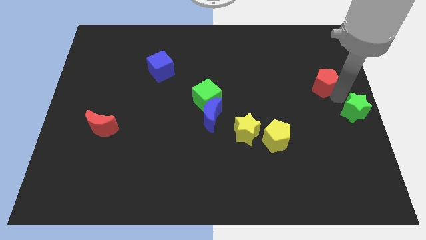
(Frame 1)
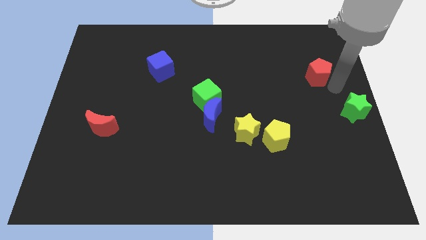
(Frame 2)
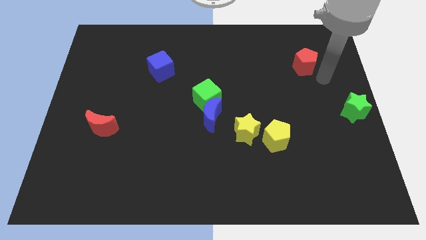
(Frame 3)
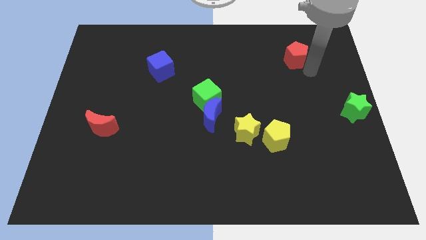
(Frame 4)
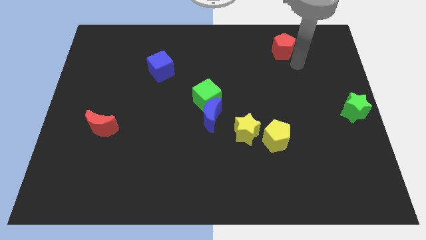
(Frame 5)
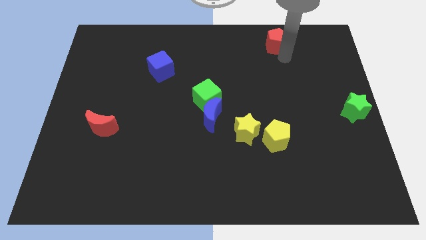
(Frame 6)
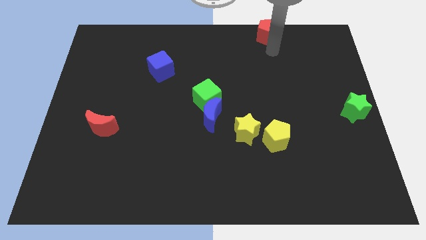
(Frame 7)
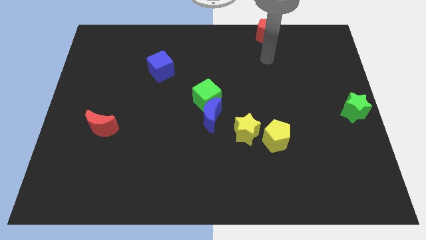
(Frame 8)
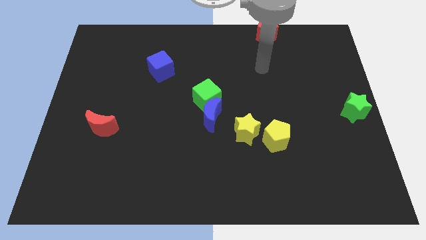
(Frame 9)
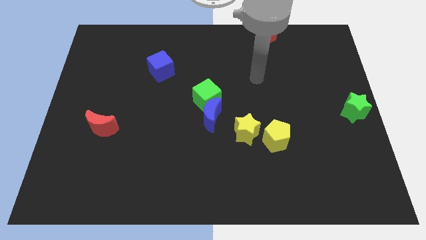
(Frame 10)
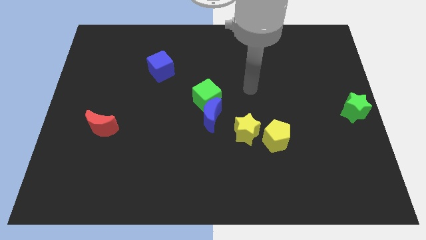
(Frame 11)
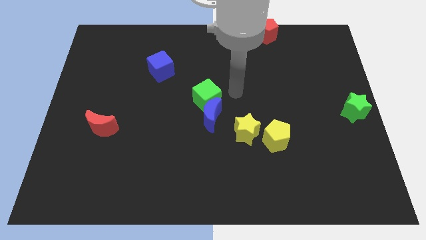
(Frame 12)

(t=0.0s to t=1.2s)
push red crescent towards the top of the board

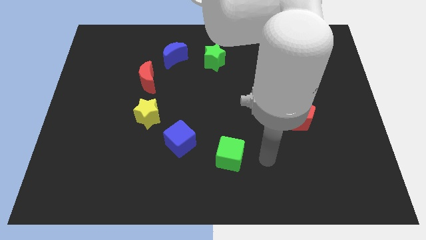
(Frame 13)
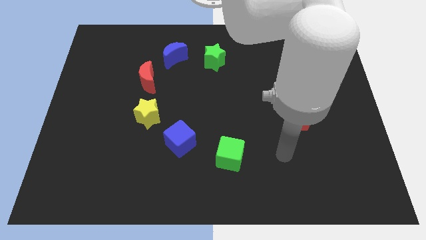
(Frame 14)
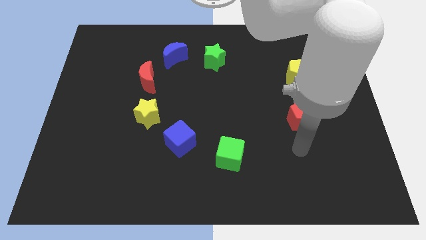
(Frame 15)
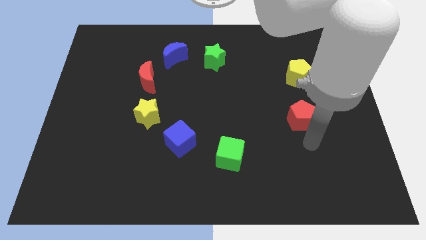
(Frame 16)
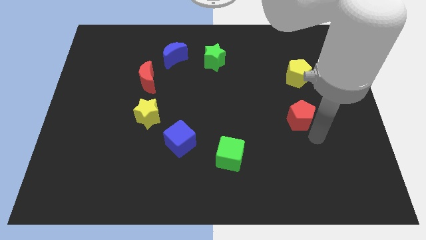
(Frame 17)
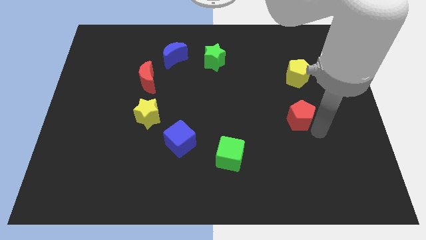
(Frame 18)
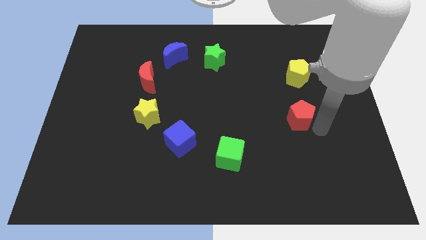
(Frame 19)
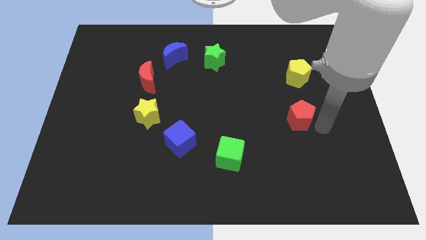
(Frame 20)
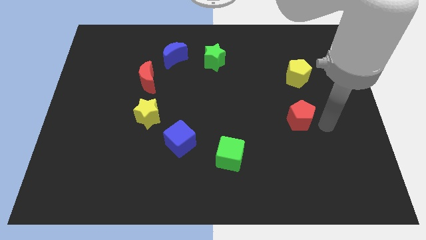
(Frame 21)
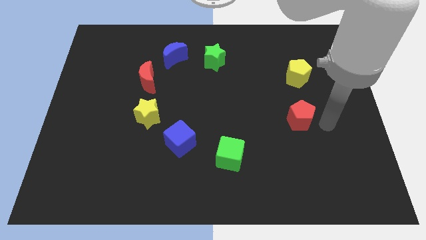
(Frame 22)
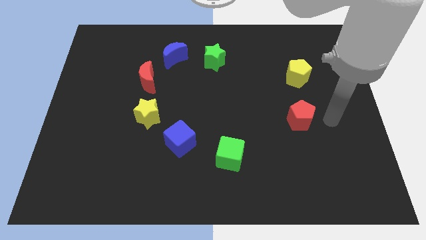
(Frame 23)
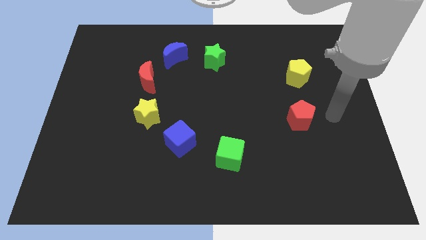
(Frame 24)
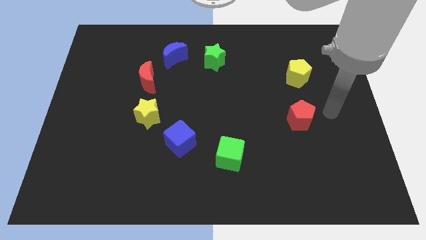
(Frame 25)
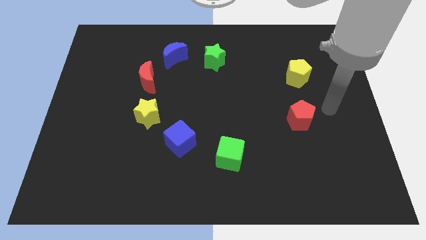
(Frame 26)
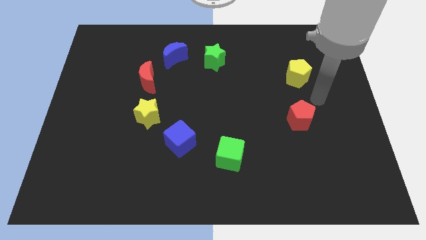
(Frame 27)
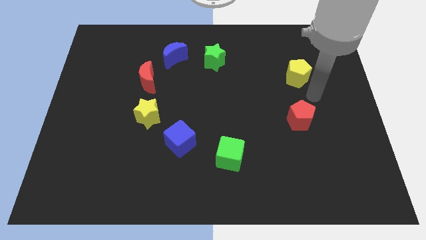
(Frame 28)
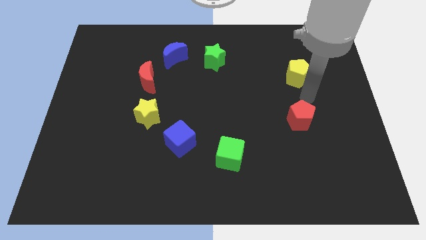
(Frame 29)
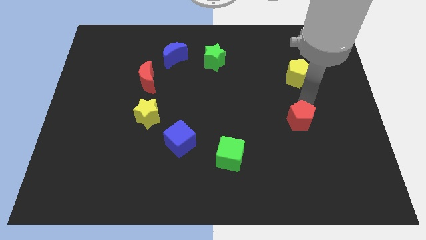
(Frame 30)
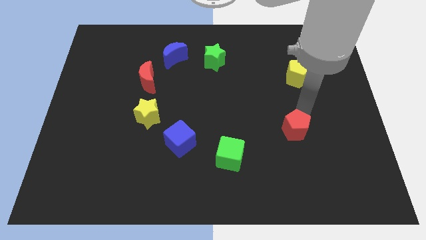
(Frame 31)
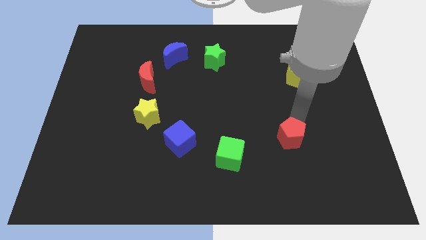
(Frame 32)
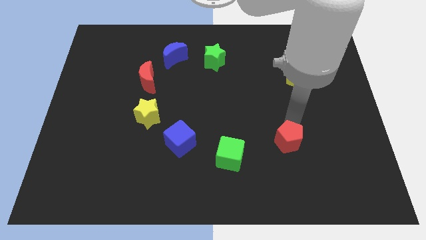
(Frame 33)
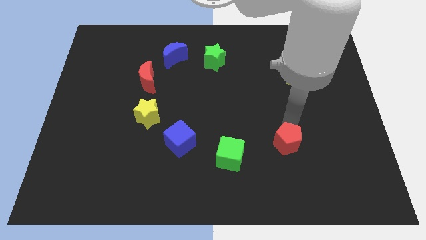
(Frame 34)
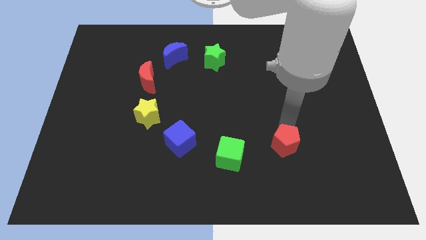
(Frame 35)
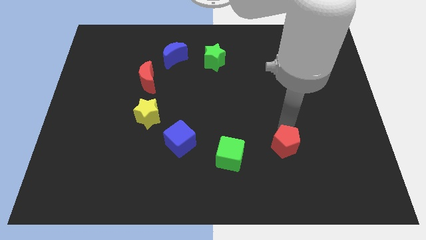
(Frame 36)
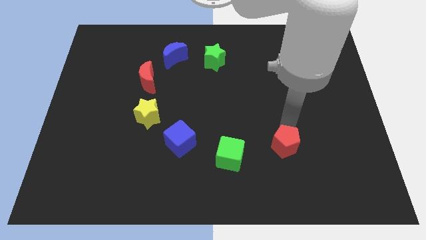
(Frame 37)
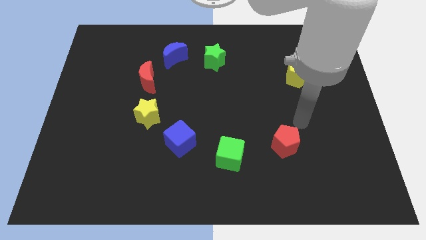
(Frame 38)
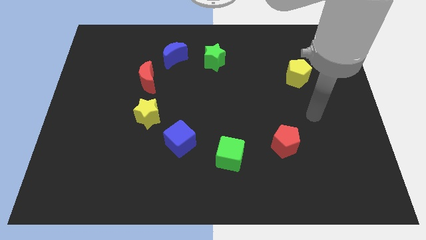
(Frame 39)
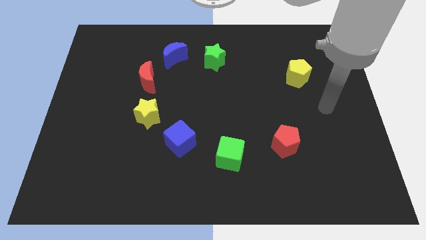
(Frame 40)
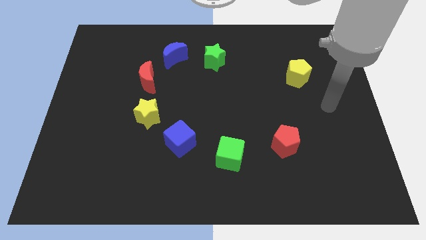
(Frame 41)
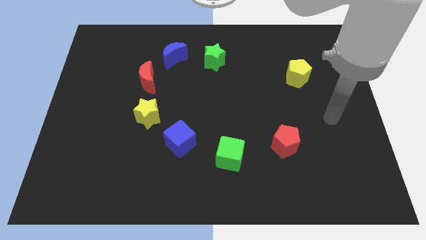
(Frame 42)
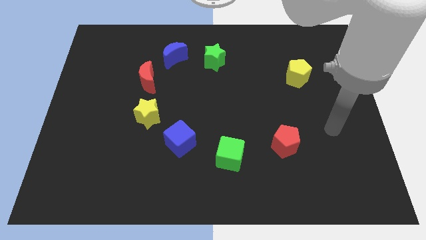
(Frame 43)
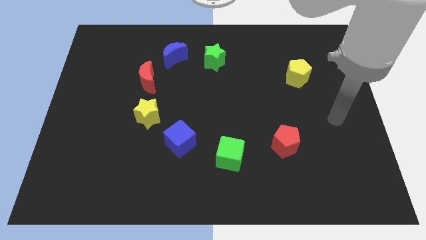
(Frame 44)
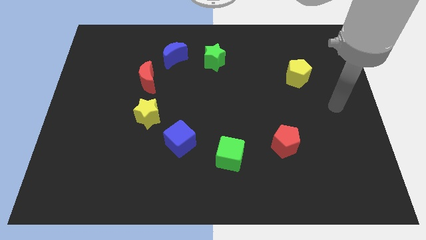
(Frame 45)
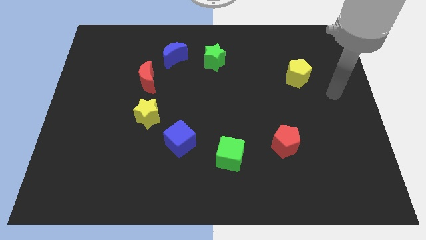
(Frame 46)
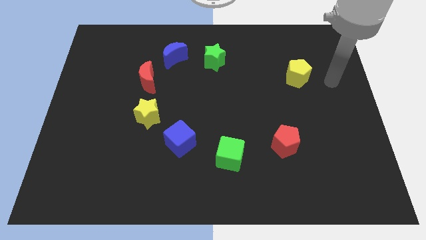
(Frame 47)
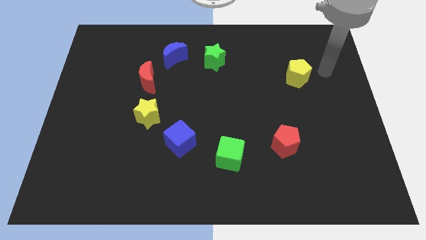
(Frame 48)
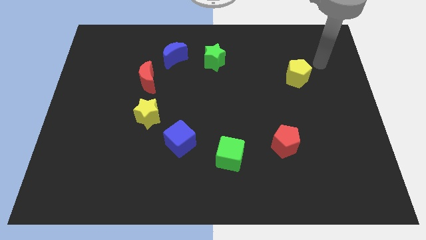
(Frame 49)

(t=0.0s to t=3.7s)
place the red pentagon diagonally top right to the green cube

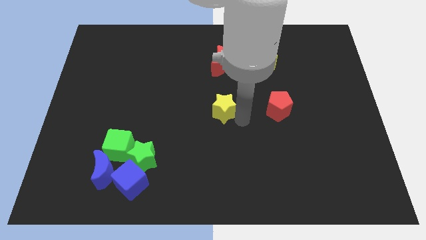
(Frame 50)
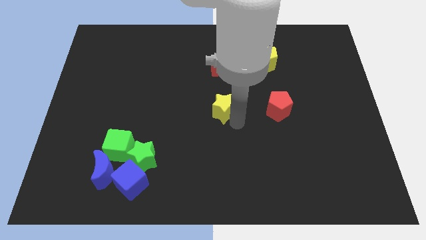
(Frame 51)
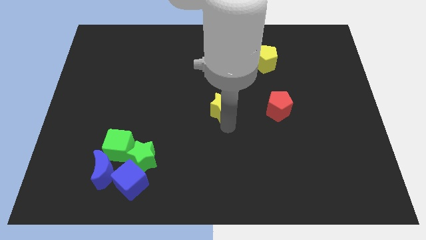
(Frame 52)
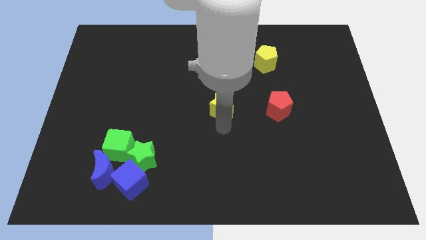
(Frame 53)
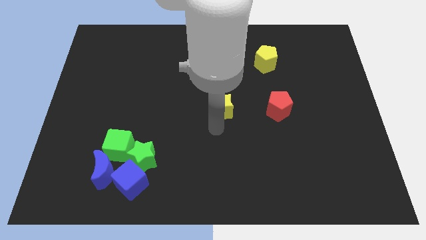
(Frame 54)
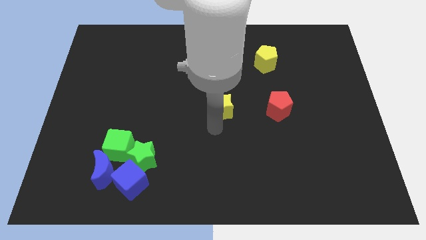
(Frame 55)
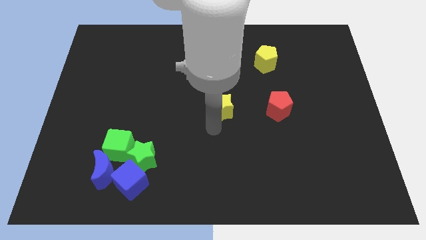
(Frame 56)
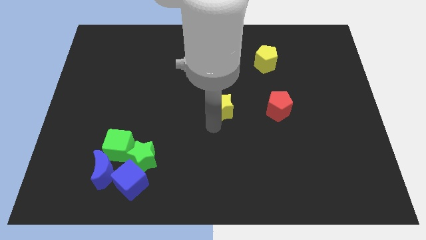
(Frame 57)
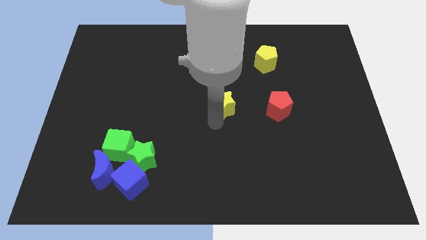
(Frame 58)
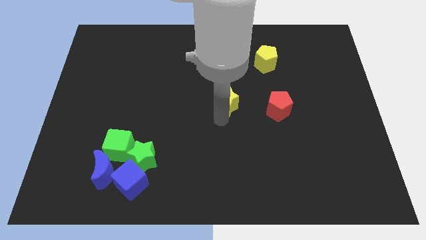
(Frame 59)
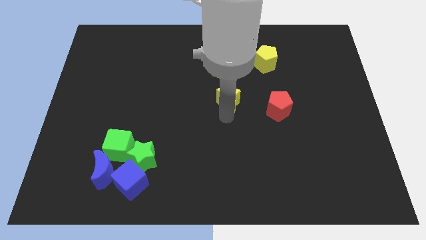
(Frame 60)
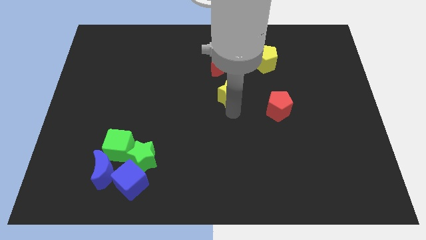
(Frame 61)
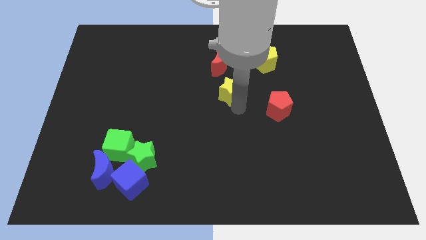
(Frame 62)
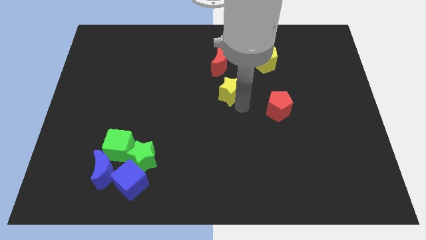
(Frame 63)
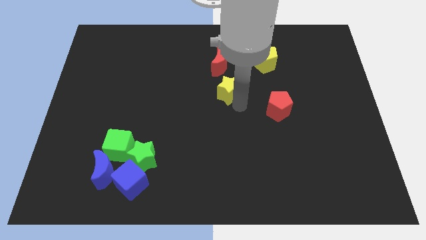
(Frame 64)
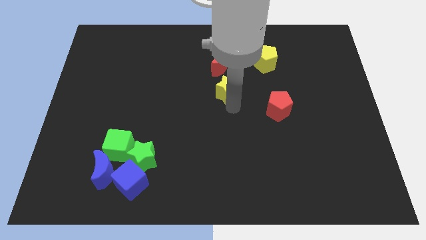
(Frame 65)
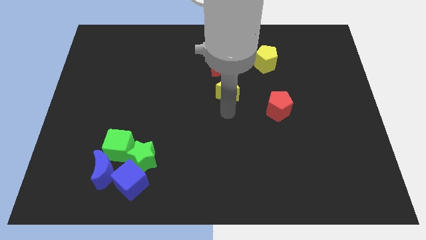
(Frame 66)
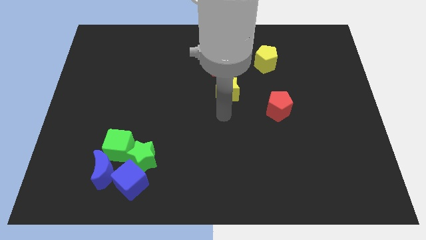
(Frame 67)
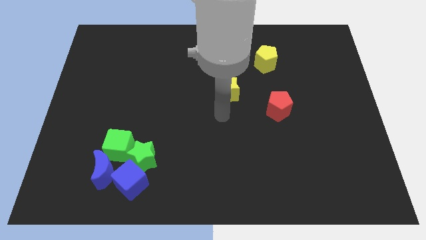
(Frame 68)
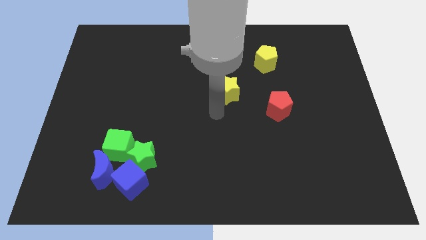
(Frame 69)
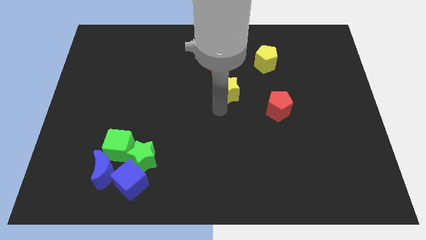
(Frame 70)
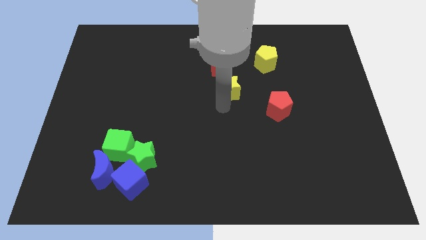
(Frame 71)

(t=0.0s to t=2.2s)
move the yellow star upwards

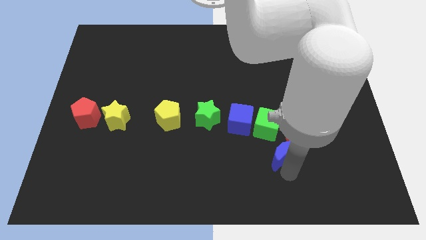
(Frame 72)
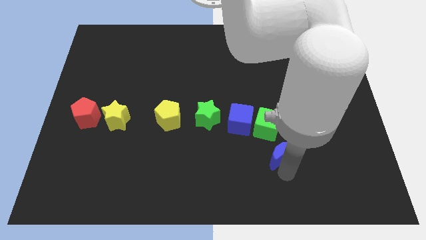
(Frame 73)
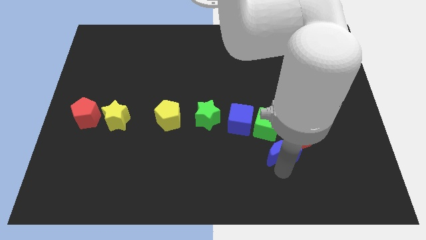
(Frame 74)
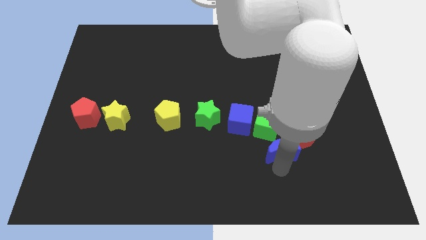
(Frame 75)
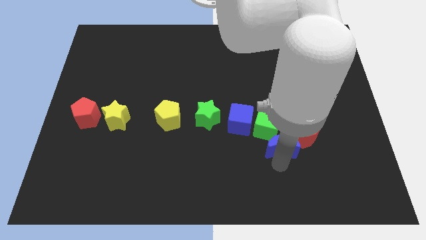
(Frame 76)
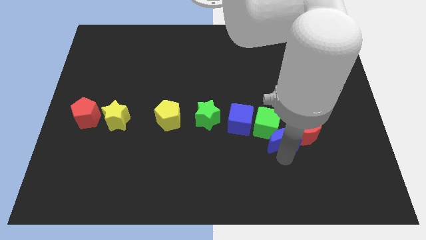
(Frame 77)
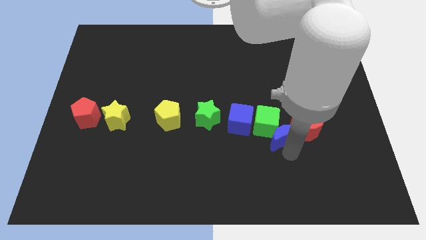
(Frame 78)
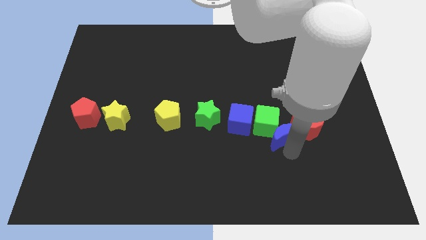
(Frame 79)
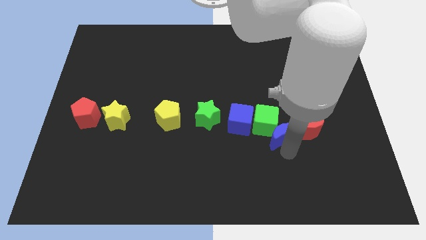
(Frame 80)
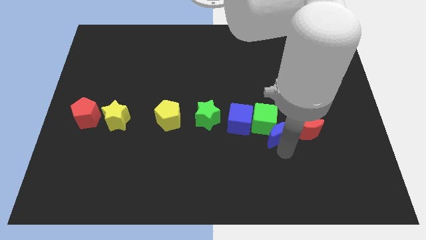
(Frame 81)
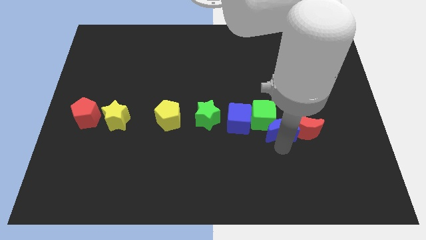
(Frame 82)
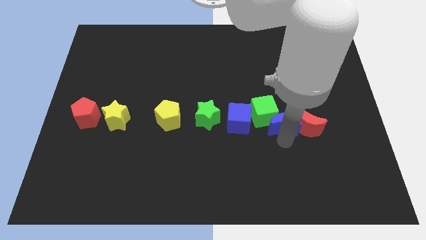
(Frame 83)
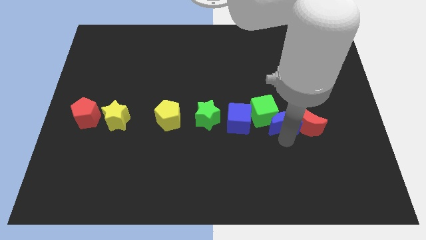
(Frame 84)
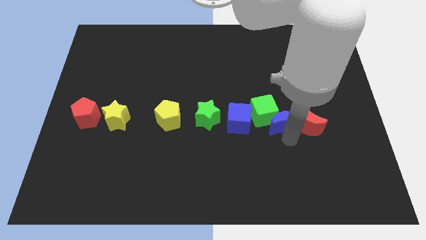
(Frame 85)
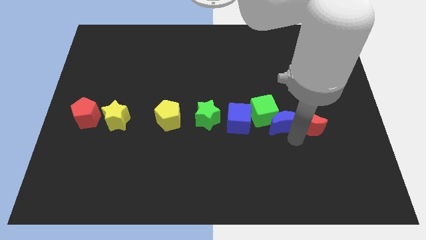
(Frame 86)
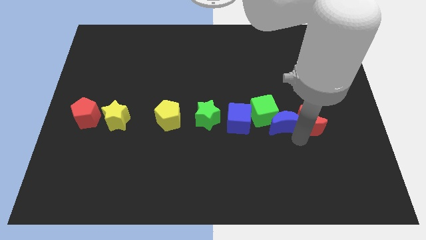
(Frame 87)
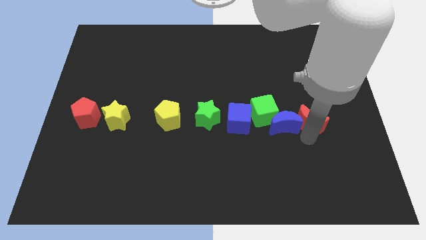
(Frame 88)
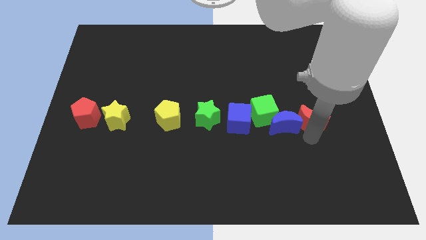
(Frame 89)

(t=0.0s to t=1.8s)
push the blue crescent into the green cube

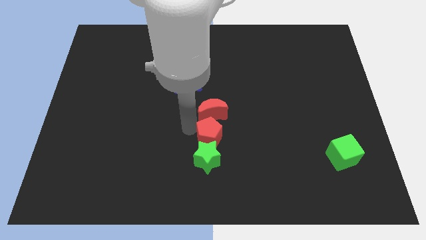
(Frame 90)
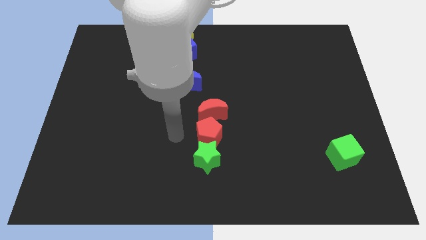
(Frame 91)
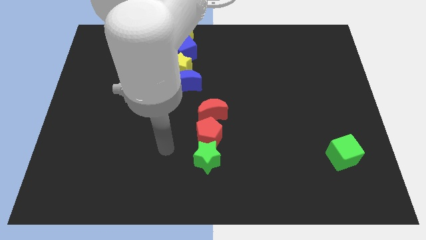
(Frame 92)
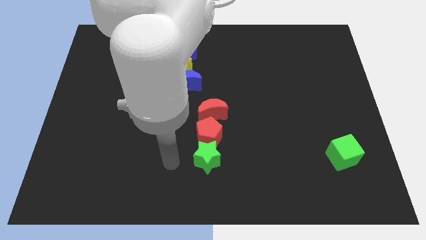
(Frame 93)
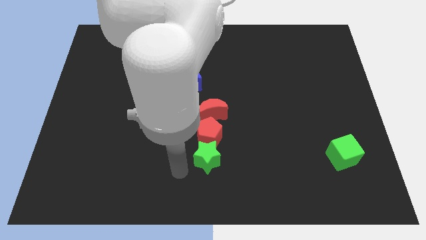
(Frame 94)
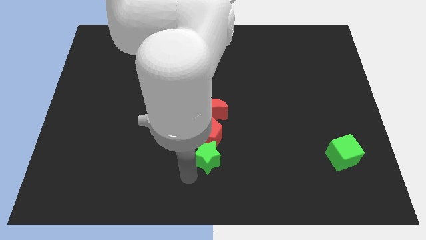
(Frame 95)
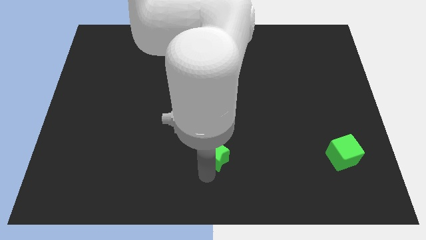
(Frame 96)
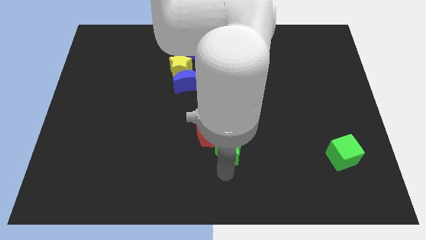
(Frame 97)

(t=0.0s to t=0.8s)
point your arm below green star
